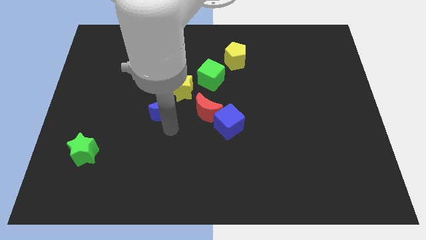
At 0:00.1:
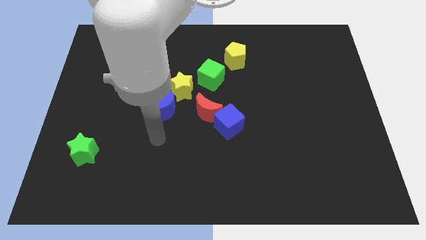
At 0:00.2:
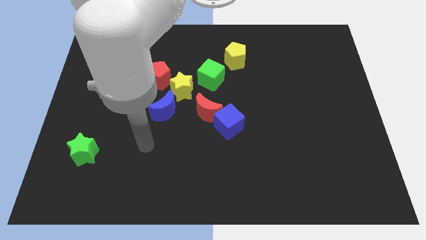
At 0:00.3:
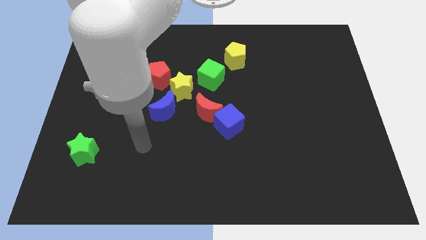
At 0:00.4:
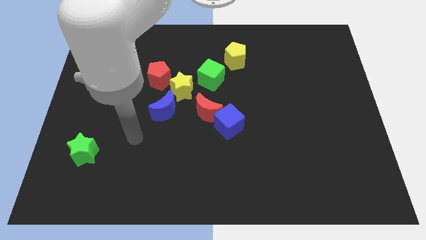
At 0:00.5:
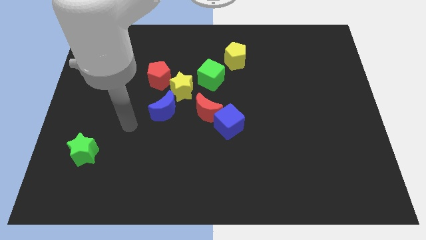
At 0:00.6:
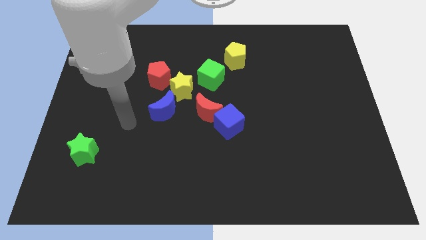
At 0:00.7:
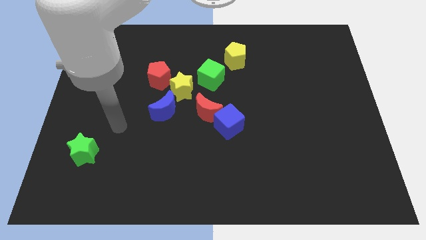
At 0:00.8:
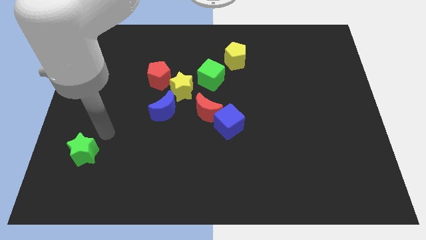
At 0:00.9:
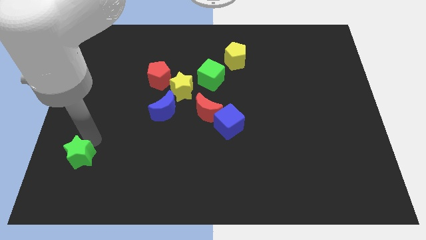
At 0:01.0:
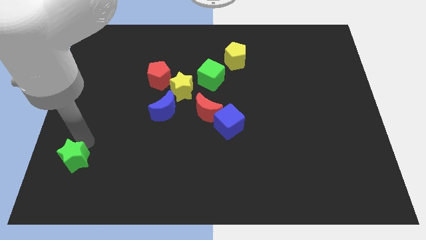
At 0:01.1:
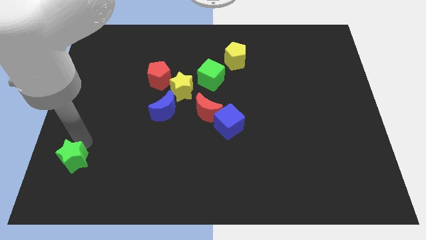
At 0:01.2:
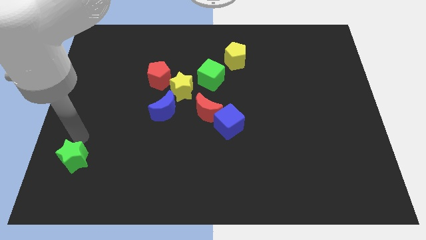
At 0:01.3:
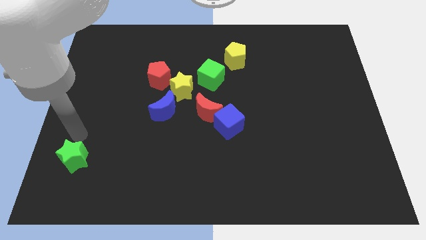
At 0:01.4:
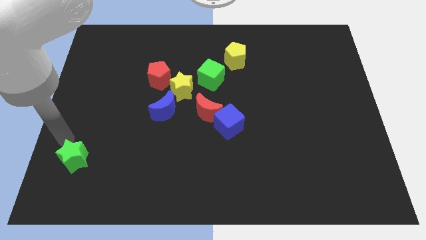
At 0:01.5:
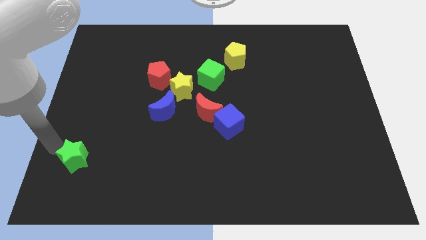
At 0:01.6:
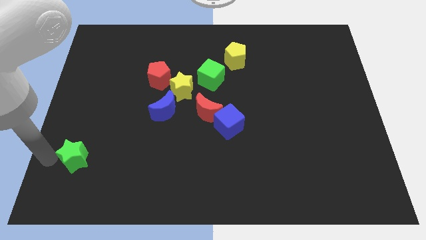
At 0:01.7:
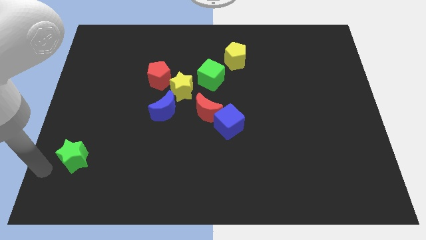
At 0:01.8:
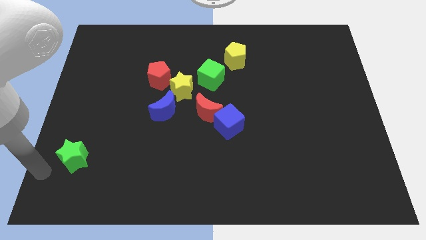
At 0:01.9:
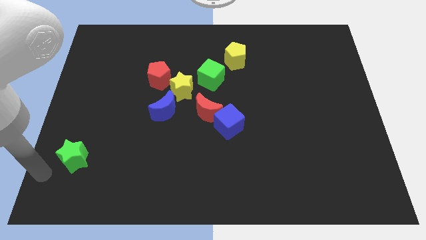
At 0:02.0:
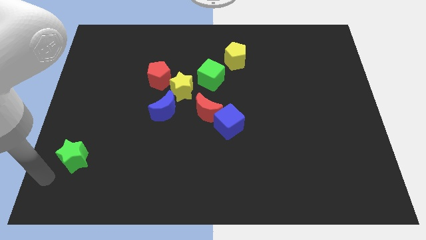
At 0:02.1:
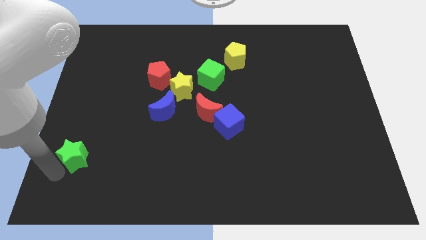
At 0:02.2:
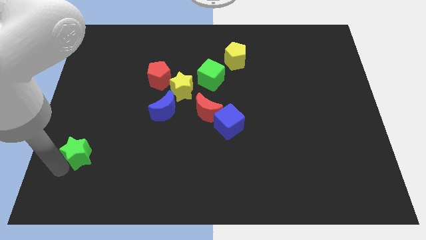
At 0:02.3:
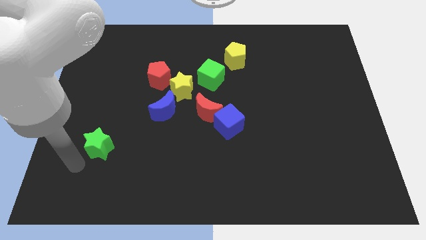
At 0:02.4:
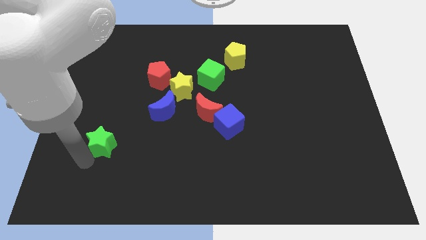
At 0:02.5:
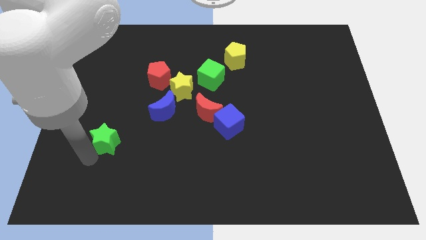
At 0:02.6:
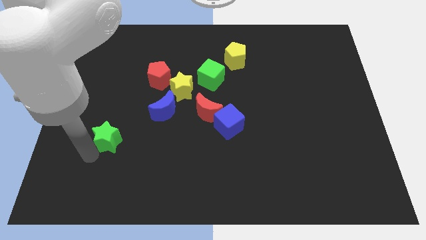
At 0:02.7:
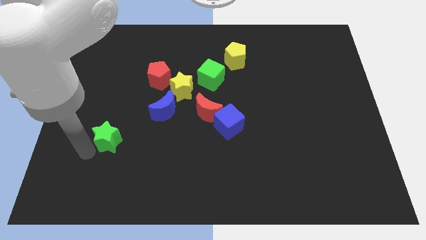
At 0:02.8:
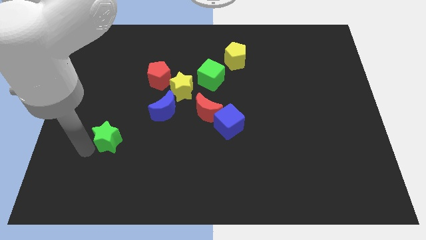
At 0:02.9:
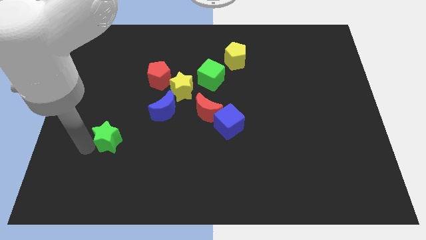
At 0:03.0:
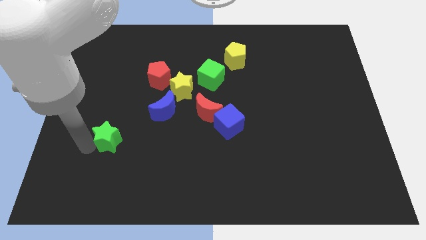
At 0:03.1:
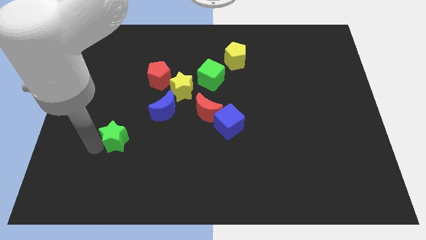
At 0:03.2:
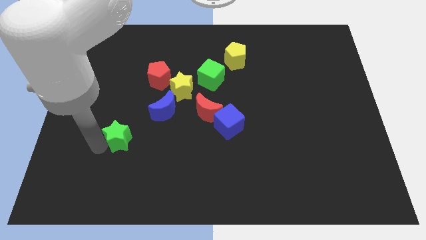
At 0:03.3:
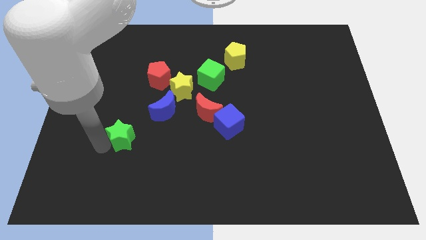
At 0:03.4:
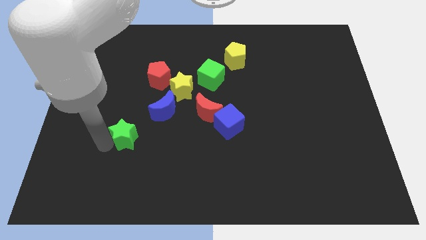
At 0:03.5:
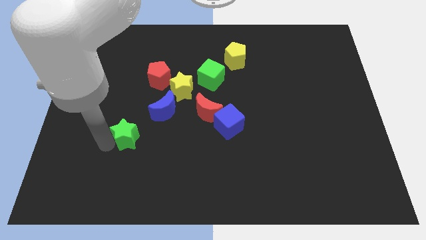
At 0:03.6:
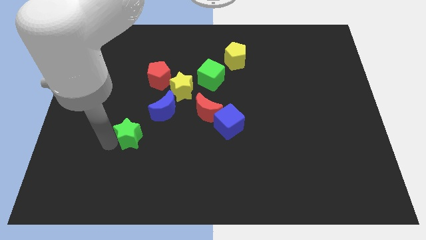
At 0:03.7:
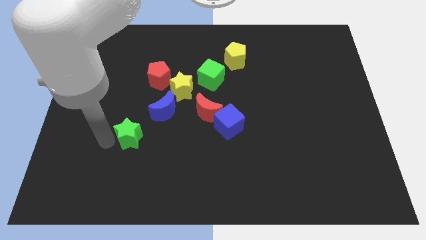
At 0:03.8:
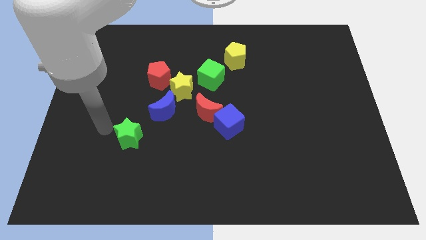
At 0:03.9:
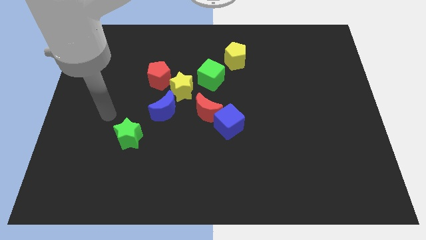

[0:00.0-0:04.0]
move the green star towards the blue crescent

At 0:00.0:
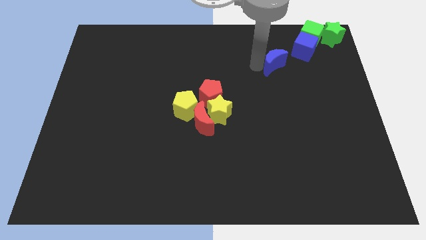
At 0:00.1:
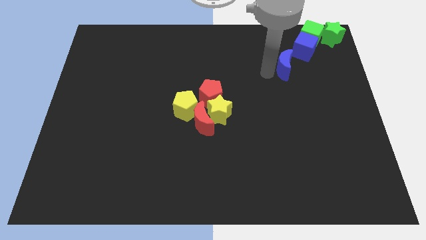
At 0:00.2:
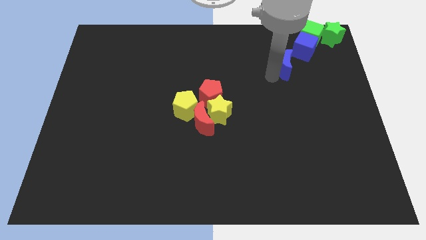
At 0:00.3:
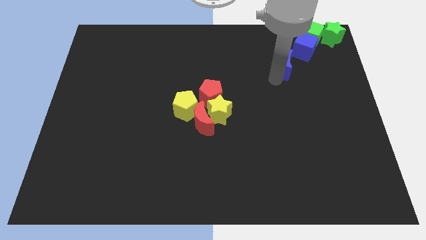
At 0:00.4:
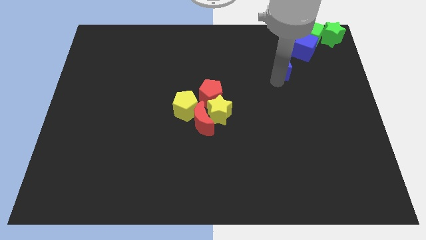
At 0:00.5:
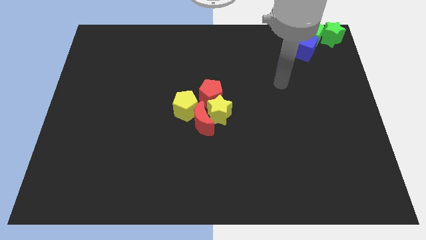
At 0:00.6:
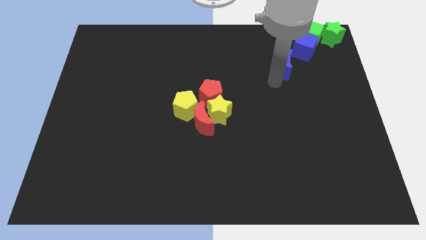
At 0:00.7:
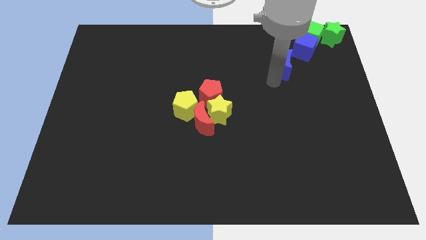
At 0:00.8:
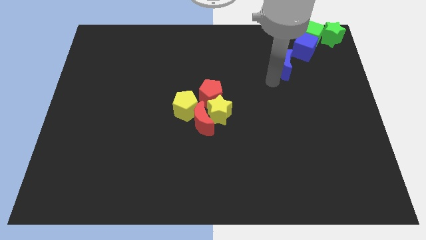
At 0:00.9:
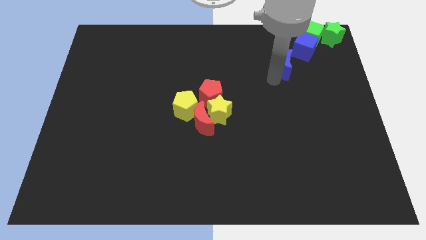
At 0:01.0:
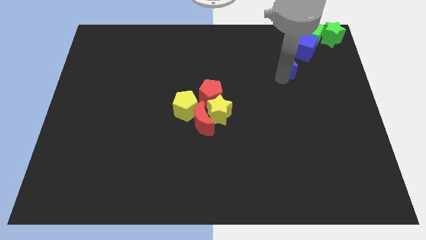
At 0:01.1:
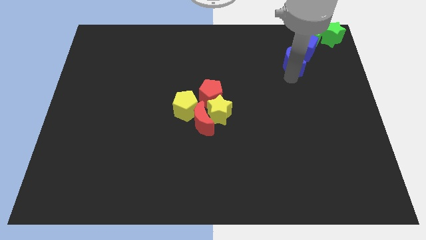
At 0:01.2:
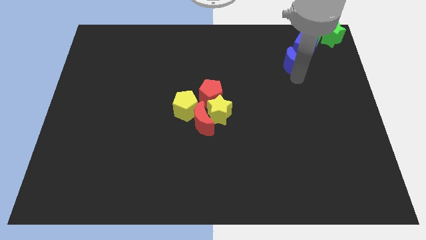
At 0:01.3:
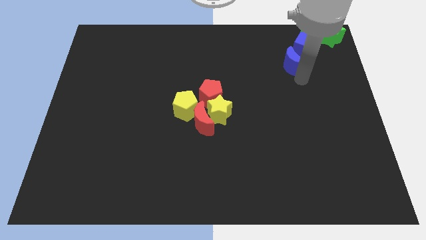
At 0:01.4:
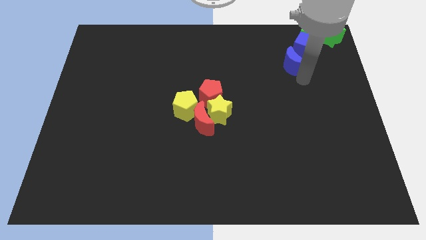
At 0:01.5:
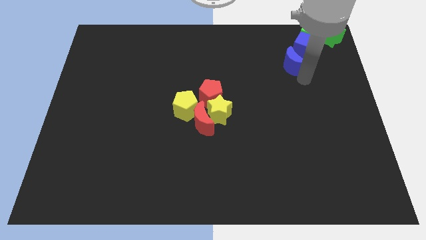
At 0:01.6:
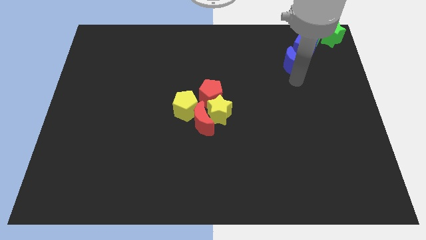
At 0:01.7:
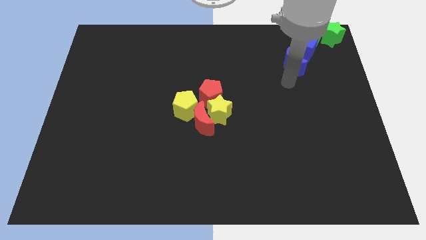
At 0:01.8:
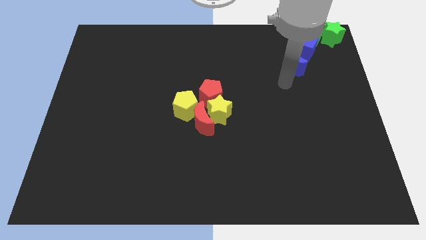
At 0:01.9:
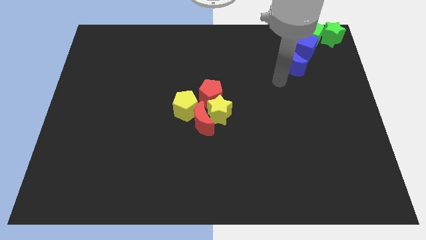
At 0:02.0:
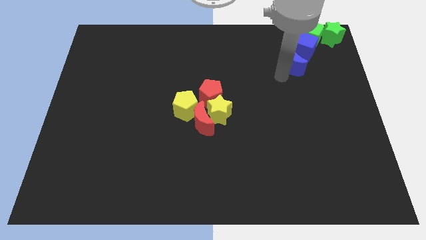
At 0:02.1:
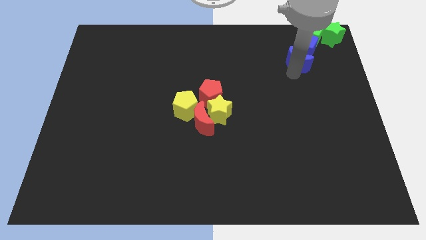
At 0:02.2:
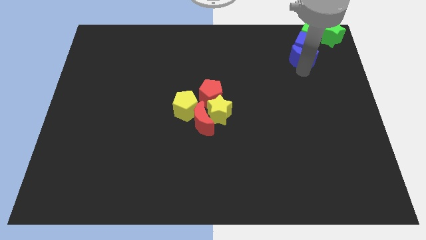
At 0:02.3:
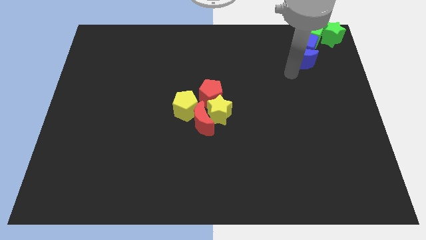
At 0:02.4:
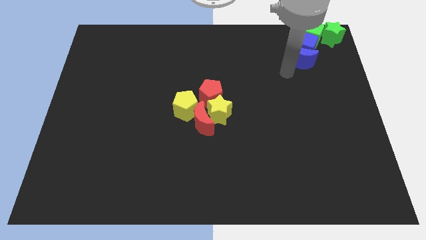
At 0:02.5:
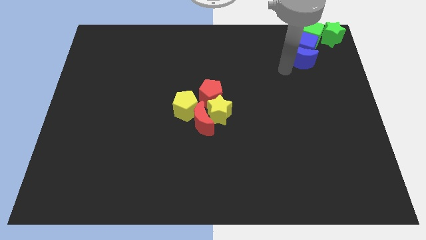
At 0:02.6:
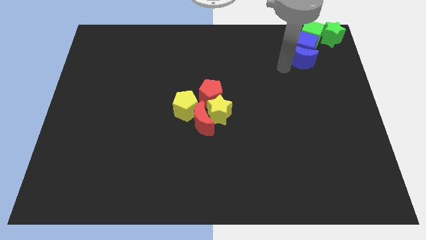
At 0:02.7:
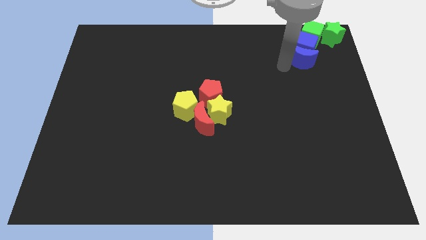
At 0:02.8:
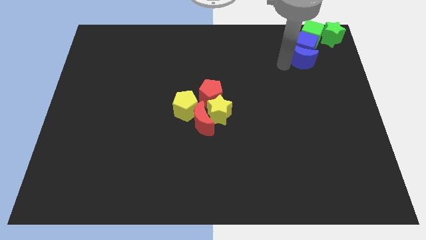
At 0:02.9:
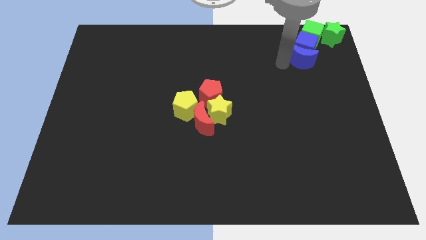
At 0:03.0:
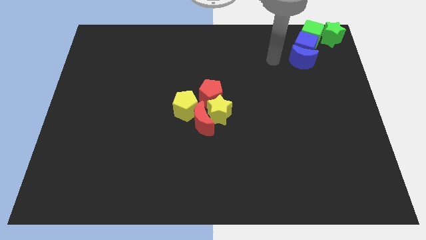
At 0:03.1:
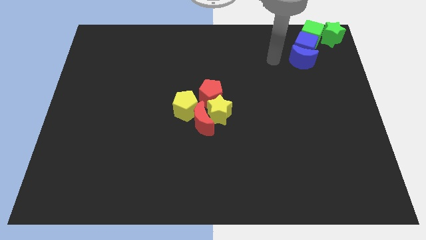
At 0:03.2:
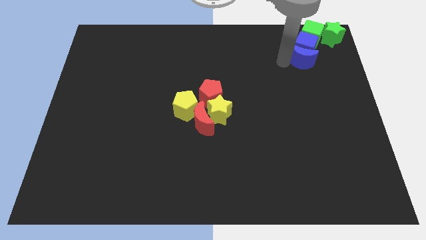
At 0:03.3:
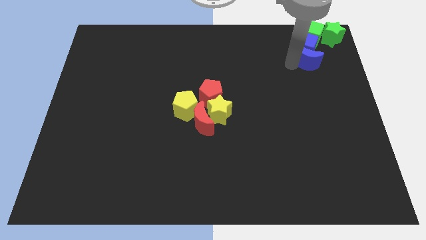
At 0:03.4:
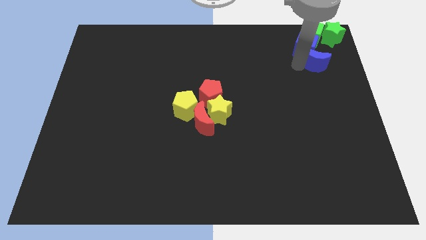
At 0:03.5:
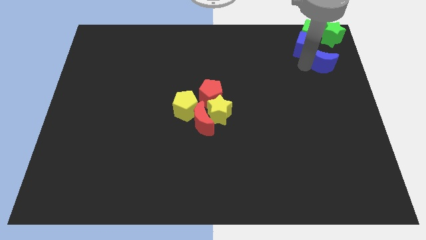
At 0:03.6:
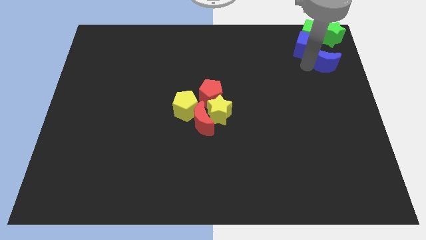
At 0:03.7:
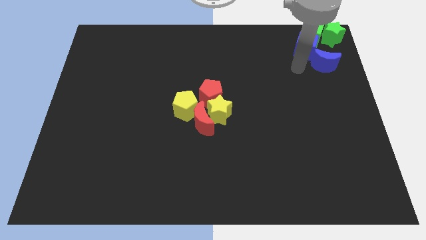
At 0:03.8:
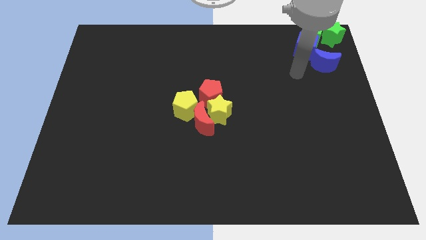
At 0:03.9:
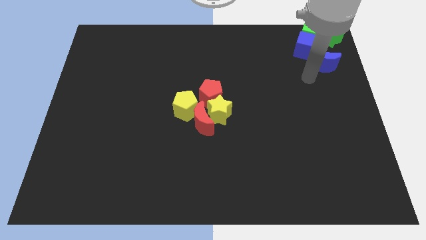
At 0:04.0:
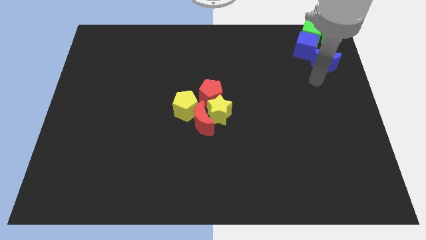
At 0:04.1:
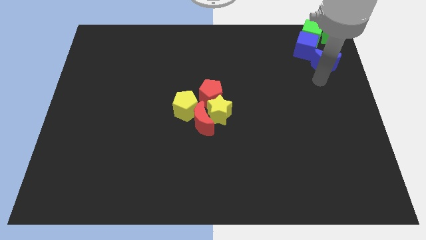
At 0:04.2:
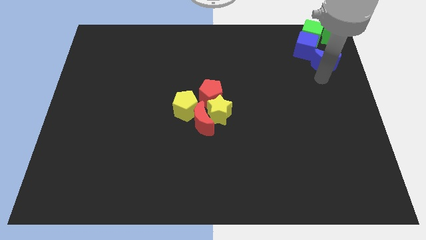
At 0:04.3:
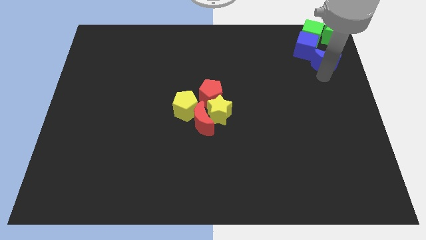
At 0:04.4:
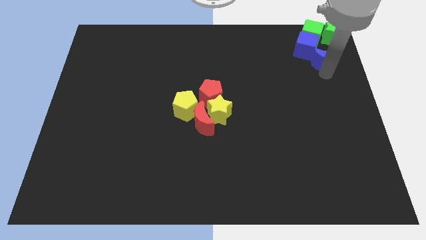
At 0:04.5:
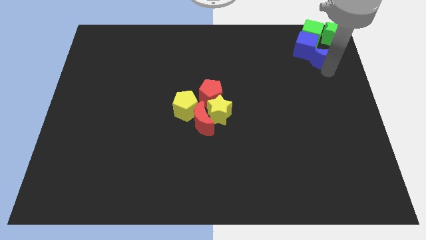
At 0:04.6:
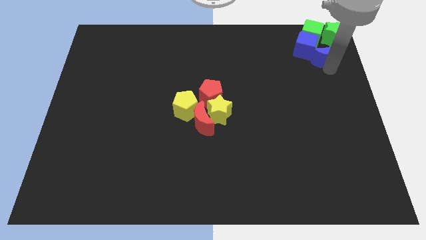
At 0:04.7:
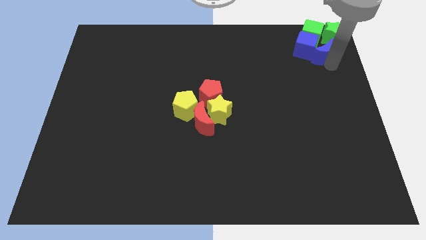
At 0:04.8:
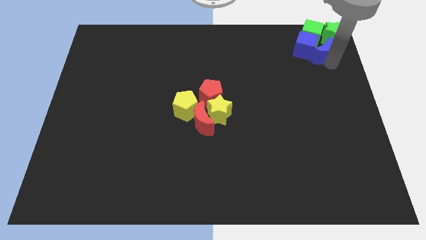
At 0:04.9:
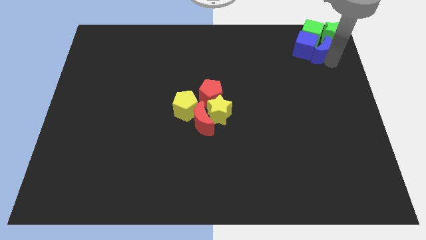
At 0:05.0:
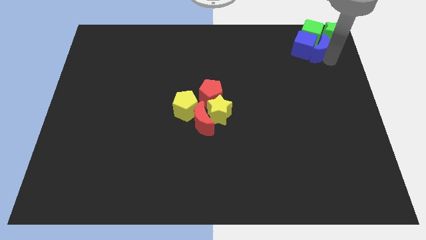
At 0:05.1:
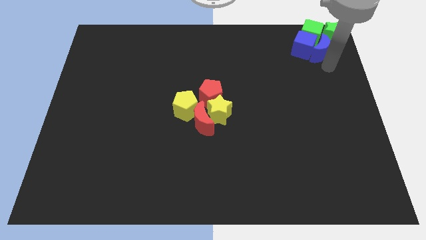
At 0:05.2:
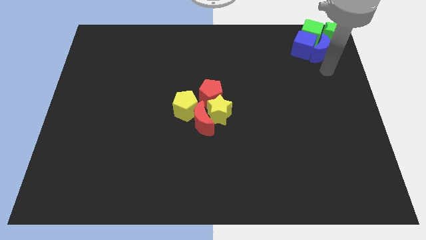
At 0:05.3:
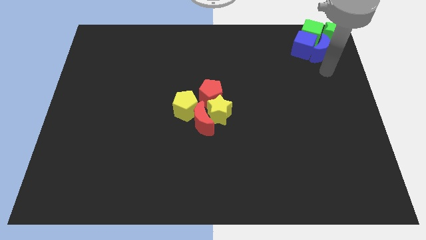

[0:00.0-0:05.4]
move the blue crescent to right side of the blue cube
